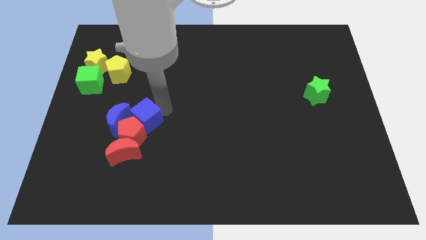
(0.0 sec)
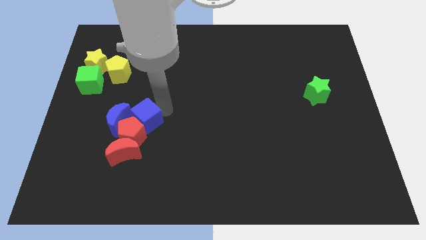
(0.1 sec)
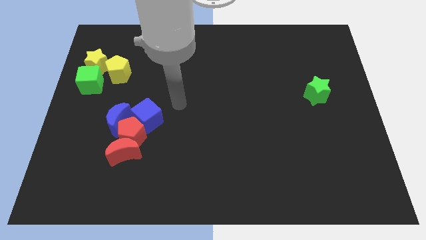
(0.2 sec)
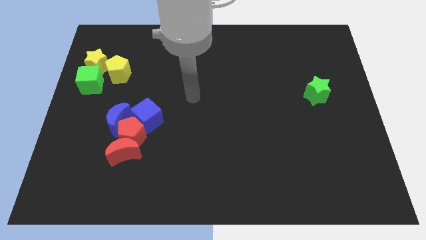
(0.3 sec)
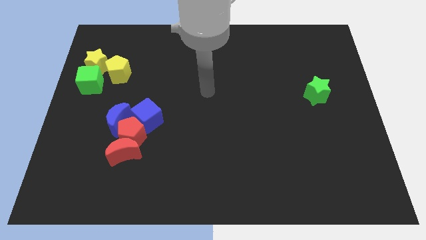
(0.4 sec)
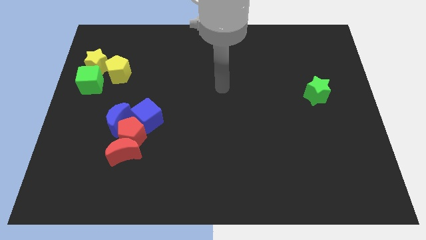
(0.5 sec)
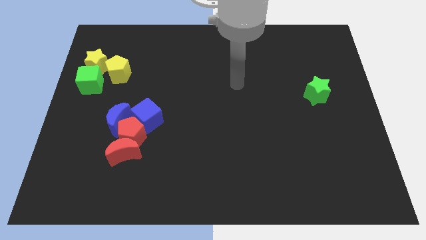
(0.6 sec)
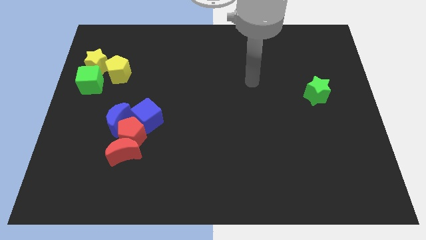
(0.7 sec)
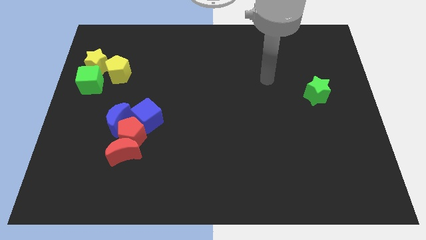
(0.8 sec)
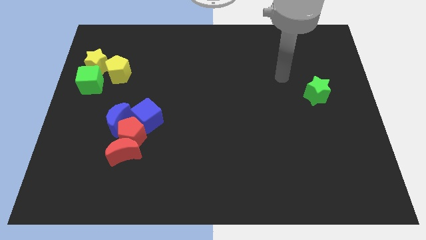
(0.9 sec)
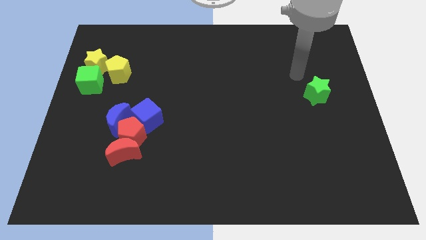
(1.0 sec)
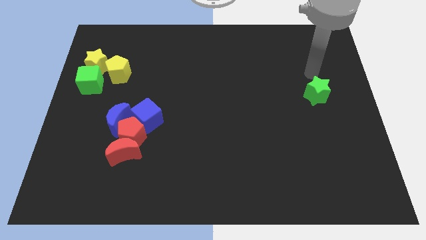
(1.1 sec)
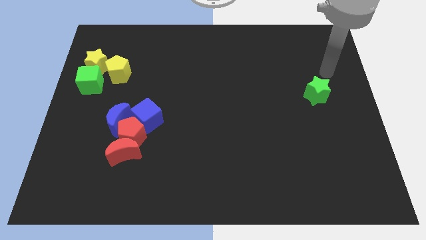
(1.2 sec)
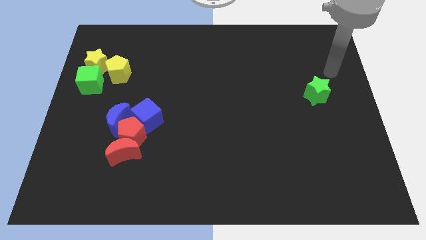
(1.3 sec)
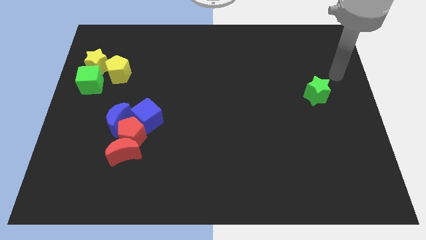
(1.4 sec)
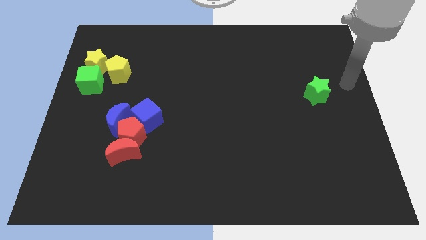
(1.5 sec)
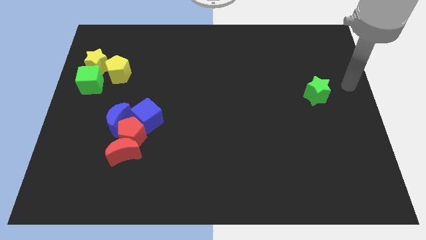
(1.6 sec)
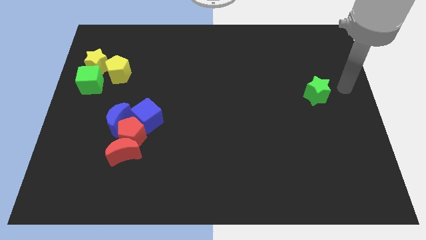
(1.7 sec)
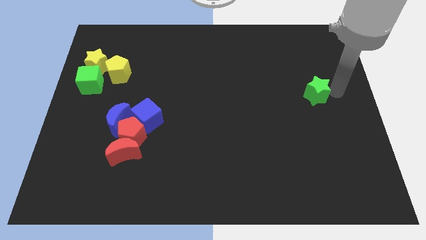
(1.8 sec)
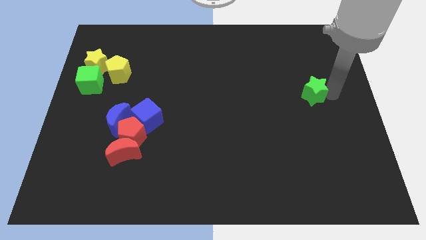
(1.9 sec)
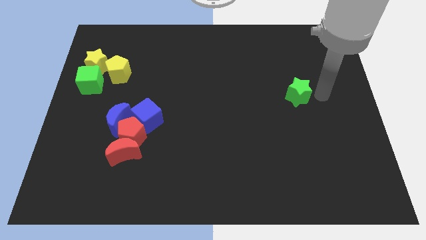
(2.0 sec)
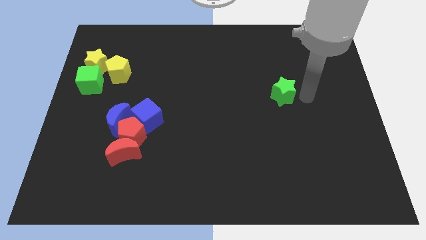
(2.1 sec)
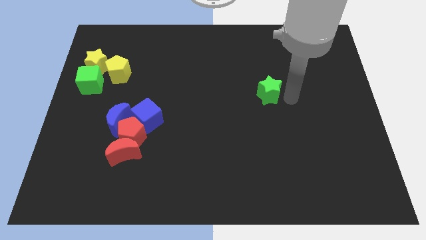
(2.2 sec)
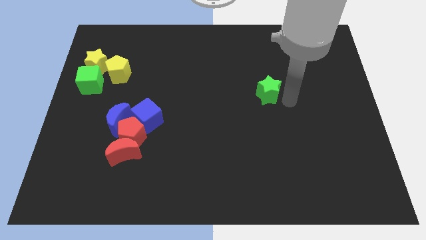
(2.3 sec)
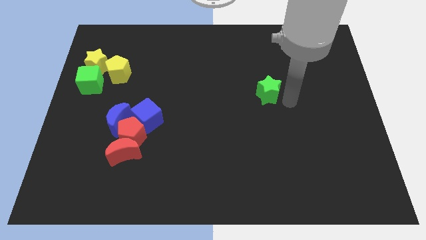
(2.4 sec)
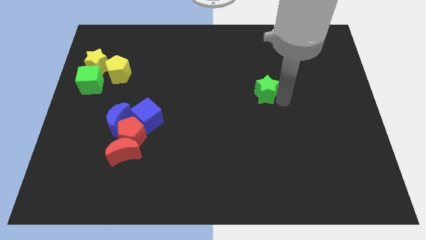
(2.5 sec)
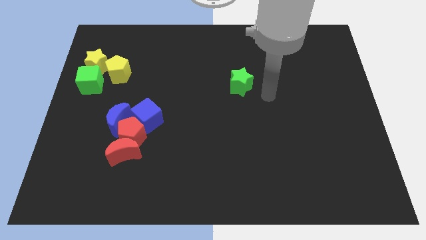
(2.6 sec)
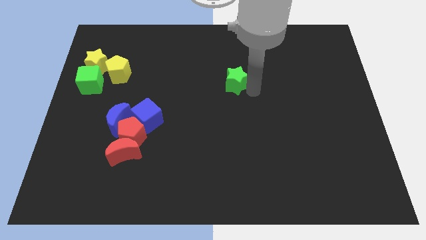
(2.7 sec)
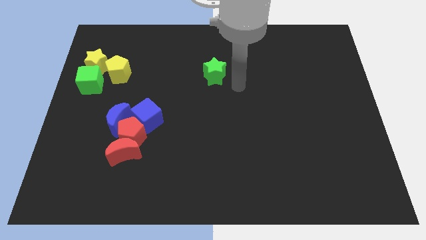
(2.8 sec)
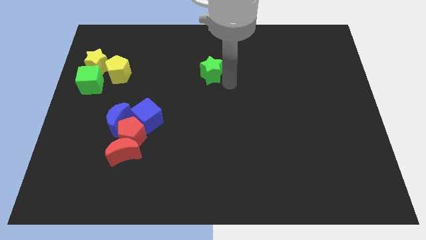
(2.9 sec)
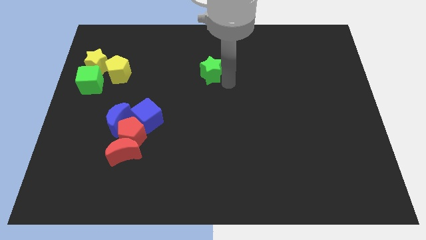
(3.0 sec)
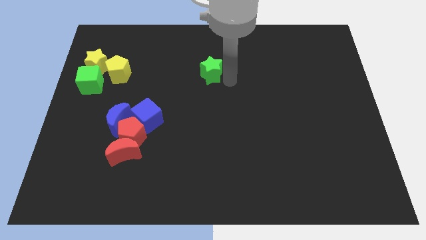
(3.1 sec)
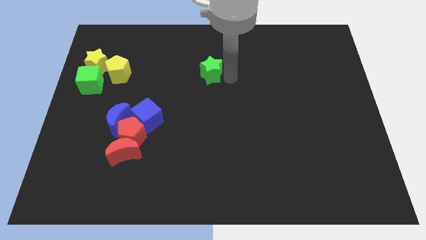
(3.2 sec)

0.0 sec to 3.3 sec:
move the green star towards the top center

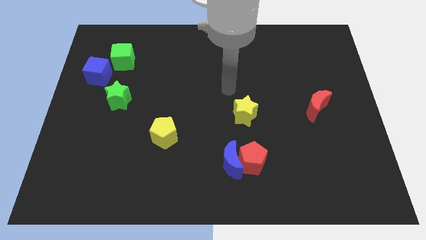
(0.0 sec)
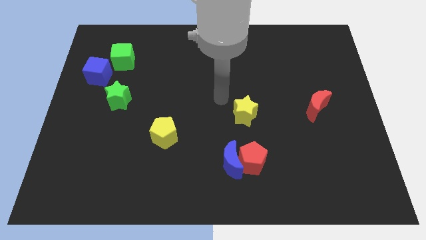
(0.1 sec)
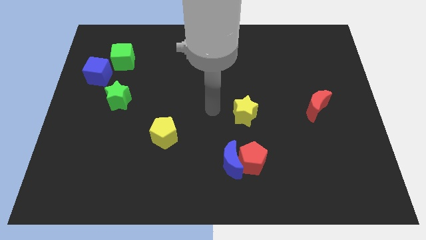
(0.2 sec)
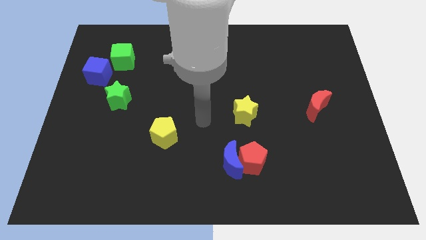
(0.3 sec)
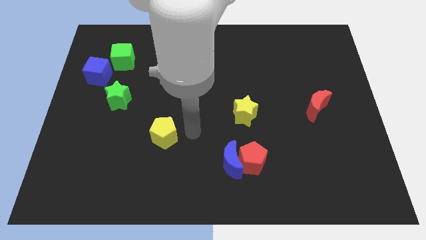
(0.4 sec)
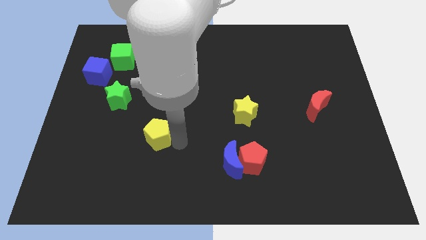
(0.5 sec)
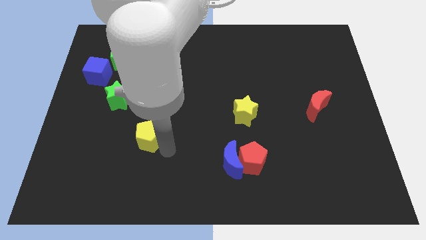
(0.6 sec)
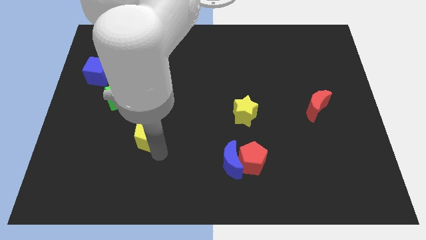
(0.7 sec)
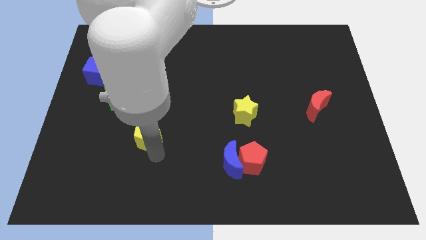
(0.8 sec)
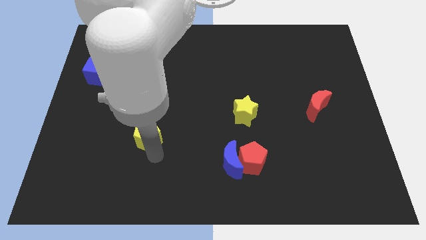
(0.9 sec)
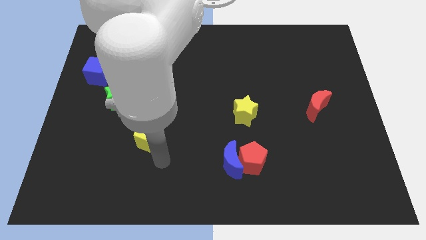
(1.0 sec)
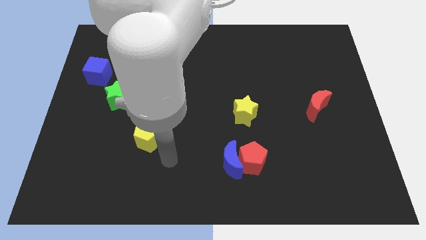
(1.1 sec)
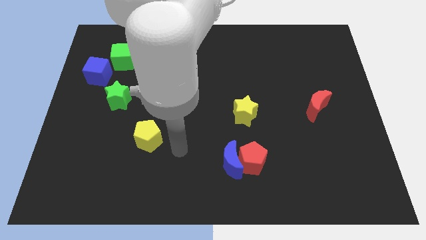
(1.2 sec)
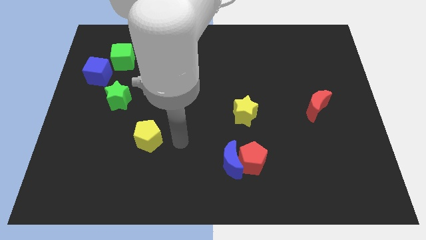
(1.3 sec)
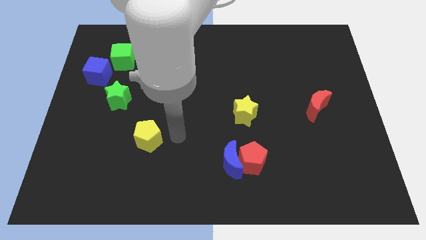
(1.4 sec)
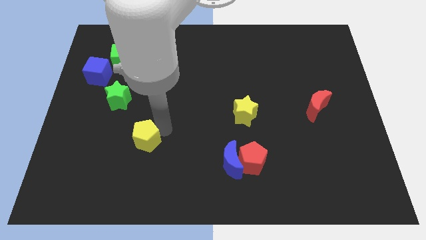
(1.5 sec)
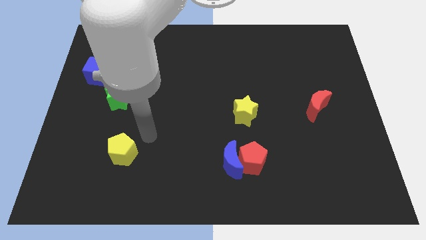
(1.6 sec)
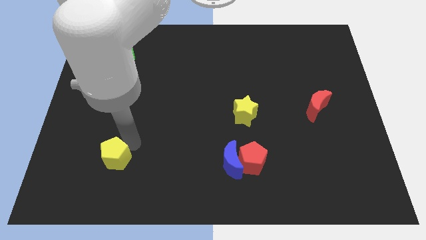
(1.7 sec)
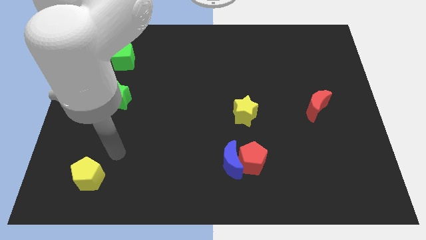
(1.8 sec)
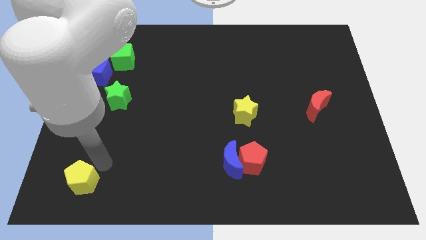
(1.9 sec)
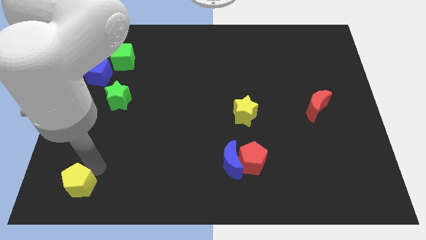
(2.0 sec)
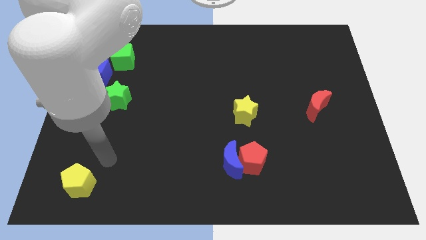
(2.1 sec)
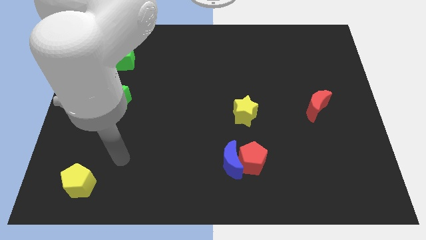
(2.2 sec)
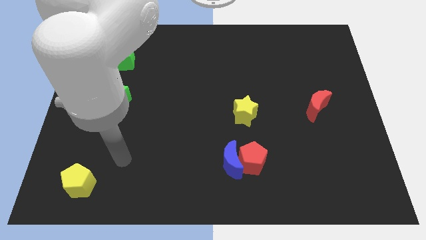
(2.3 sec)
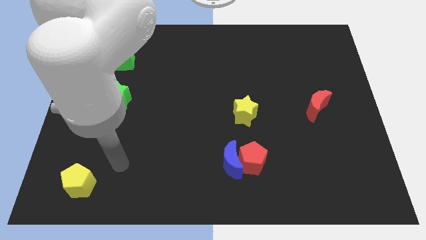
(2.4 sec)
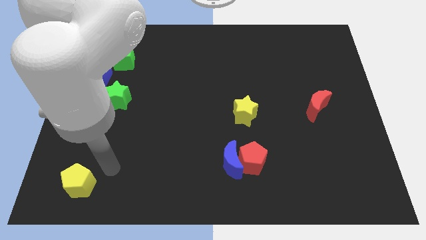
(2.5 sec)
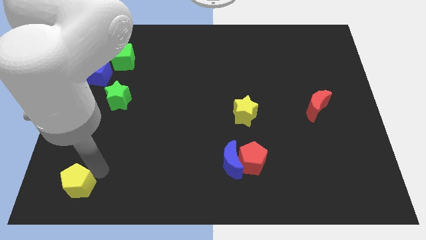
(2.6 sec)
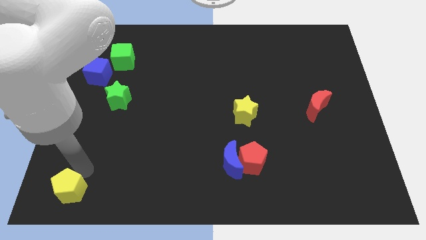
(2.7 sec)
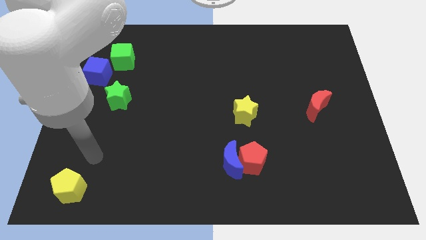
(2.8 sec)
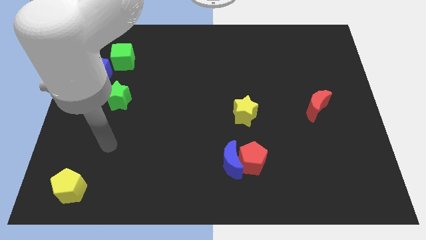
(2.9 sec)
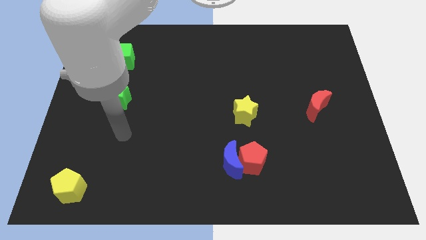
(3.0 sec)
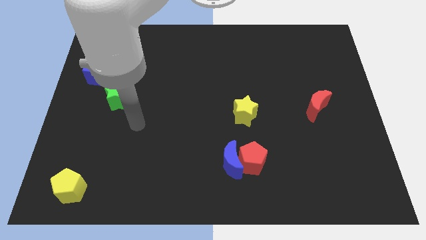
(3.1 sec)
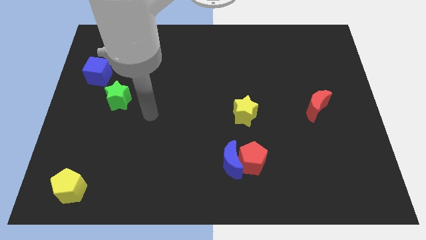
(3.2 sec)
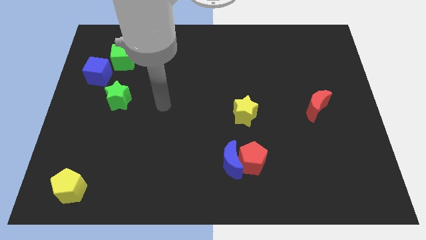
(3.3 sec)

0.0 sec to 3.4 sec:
move the yellow pentagon to the bottom left

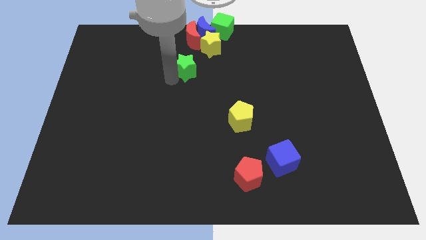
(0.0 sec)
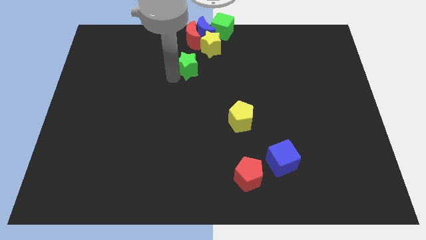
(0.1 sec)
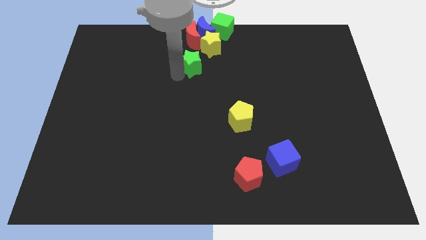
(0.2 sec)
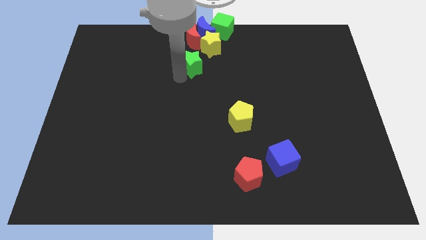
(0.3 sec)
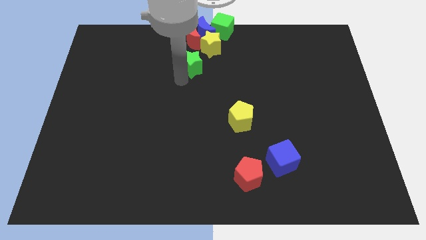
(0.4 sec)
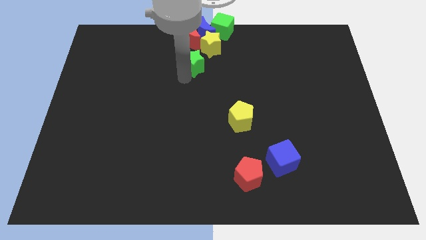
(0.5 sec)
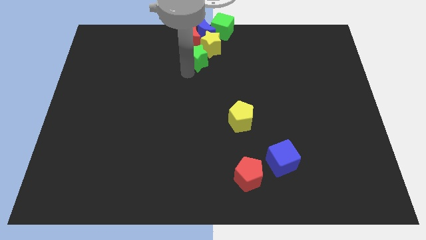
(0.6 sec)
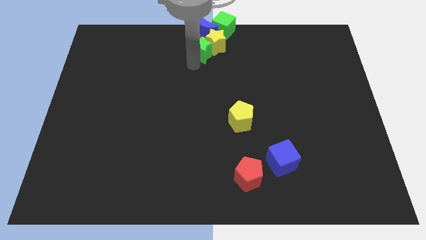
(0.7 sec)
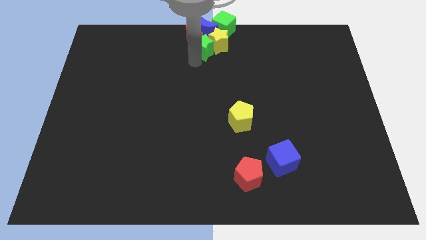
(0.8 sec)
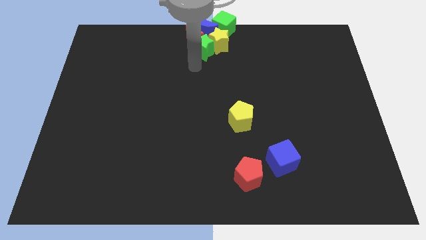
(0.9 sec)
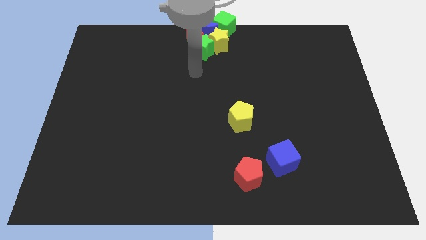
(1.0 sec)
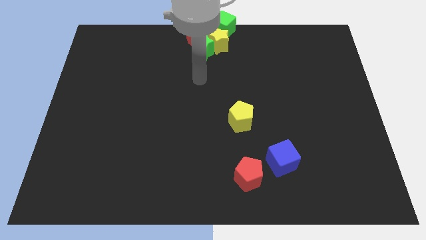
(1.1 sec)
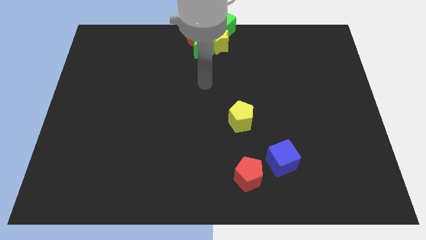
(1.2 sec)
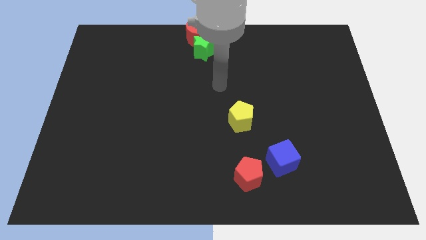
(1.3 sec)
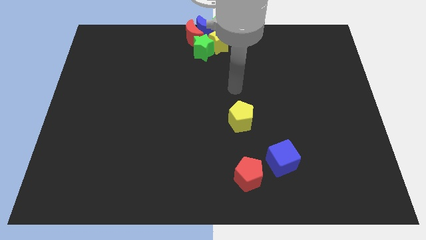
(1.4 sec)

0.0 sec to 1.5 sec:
push the green star into the yellow star

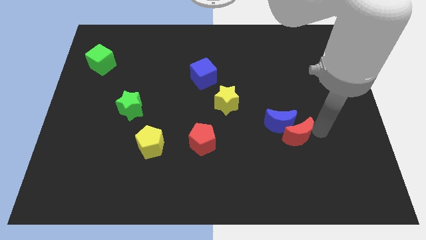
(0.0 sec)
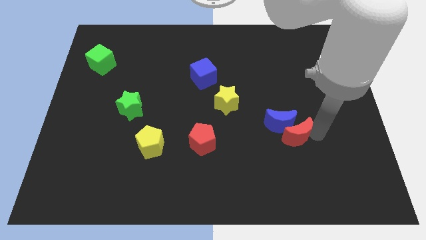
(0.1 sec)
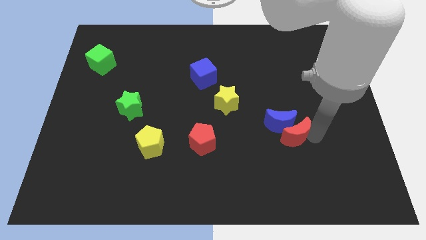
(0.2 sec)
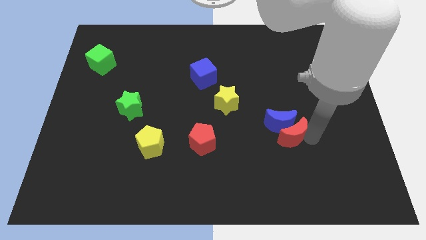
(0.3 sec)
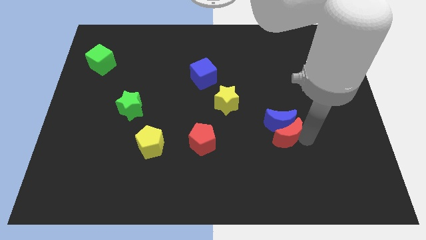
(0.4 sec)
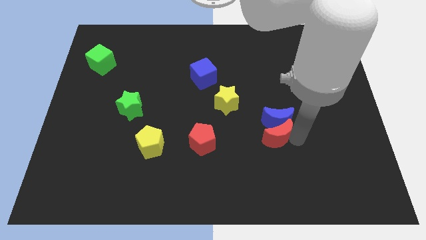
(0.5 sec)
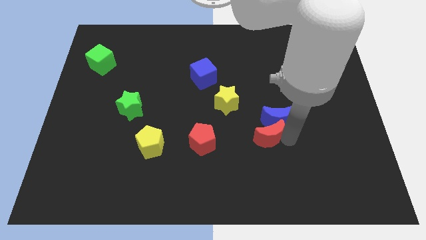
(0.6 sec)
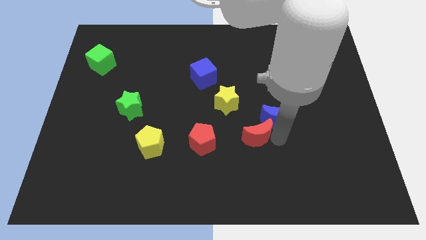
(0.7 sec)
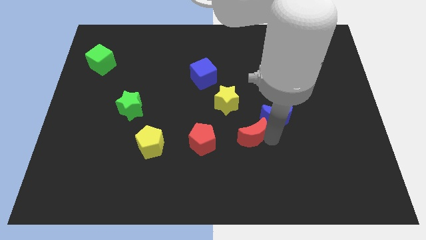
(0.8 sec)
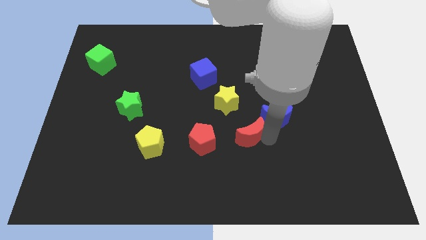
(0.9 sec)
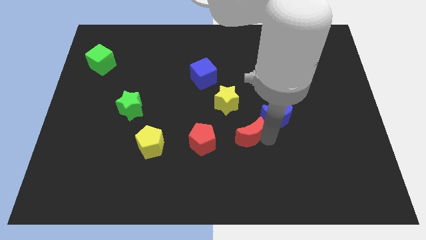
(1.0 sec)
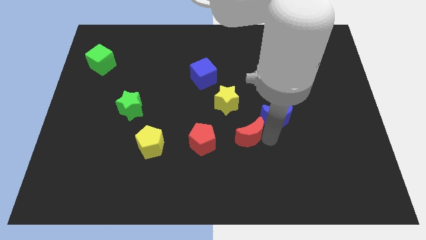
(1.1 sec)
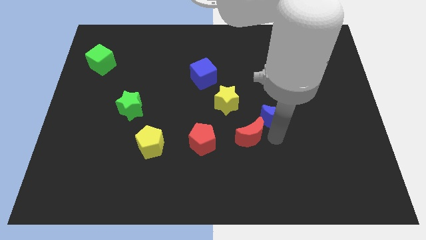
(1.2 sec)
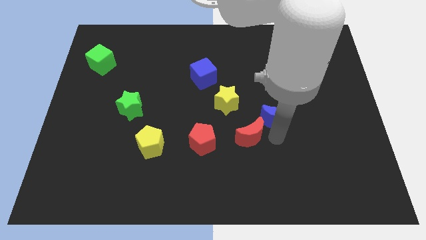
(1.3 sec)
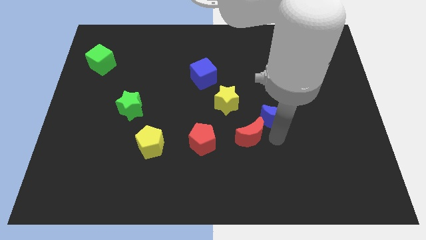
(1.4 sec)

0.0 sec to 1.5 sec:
move the red crescent to the left of the blue crescent
